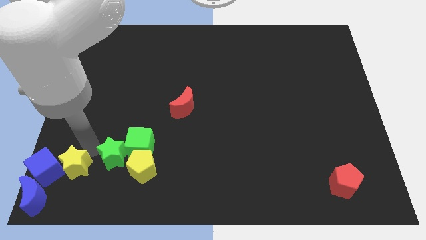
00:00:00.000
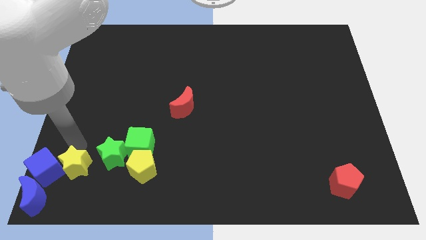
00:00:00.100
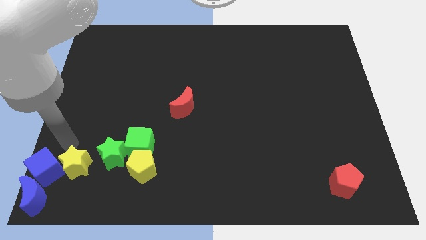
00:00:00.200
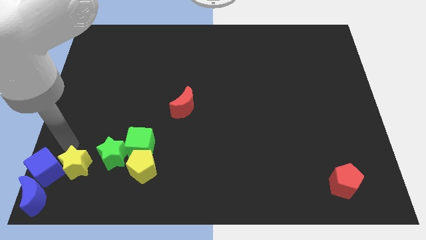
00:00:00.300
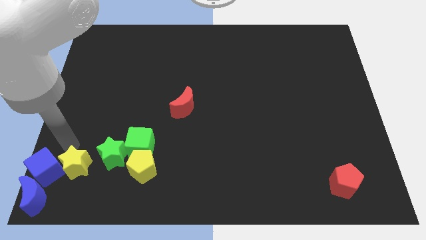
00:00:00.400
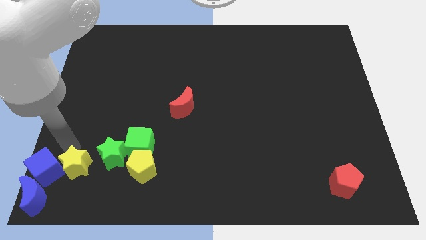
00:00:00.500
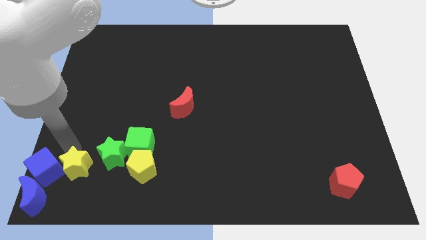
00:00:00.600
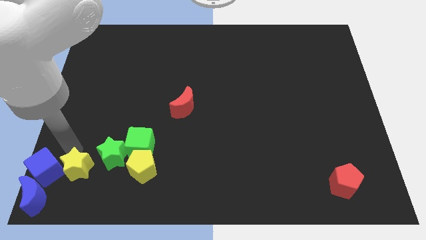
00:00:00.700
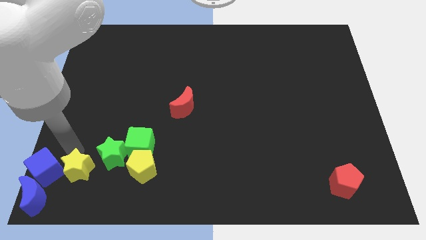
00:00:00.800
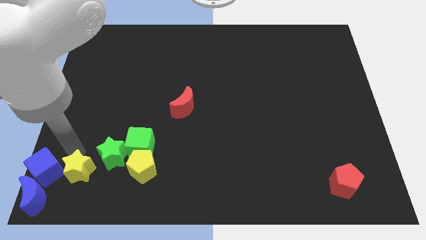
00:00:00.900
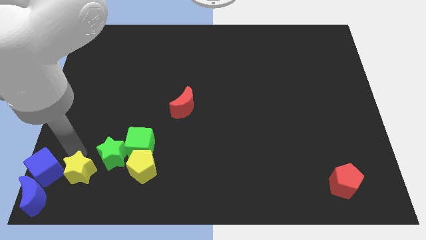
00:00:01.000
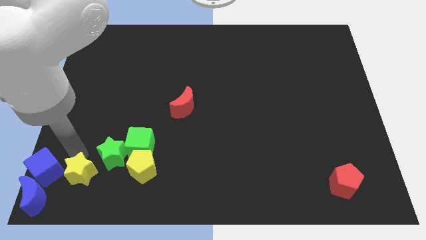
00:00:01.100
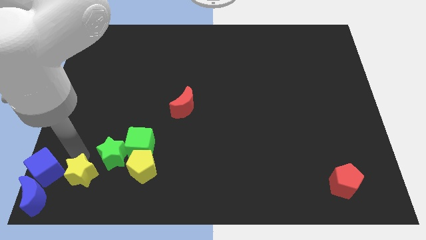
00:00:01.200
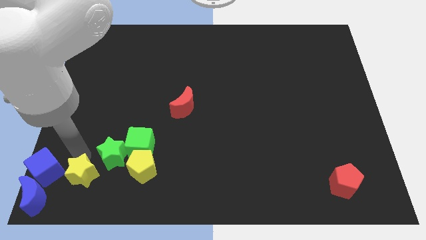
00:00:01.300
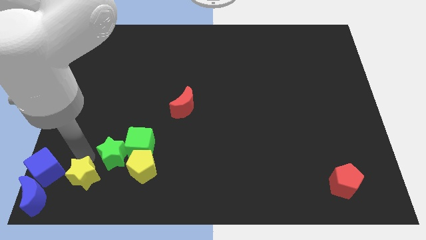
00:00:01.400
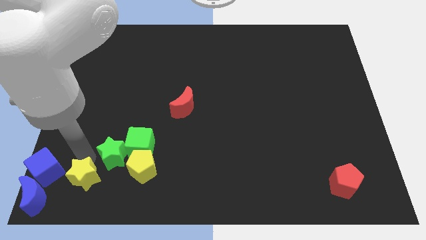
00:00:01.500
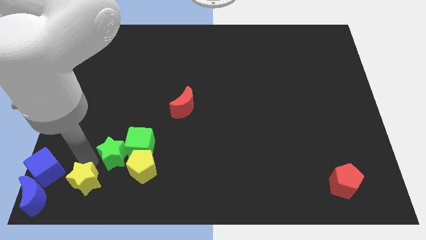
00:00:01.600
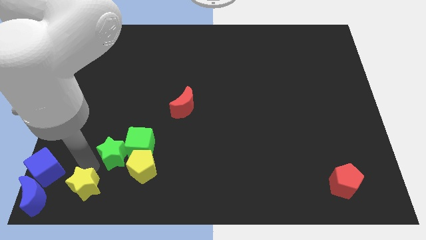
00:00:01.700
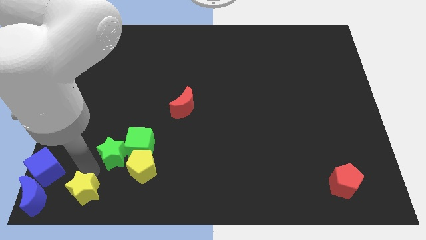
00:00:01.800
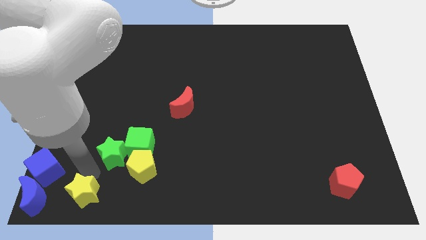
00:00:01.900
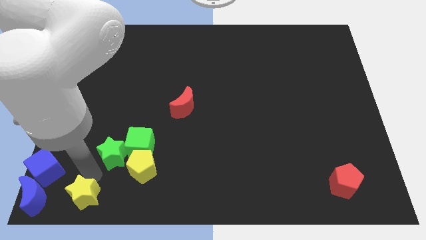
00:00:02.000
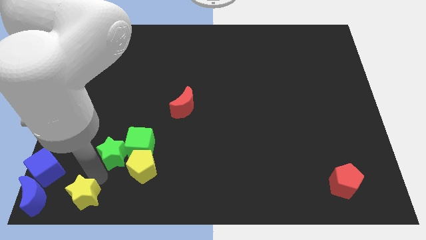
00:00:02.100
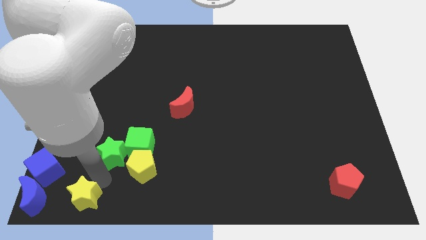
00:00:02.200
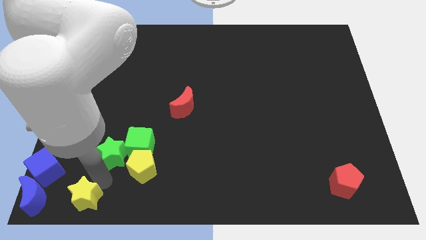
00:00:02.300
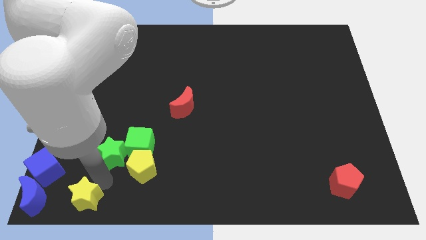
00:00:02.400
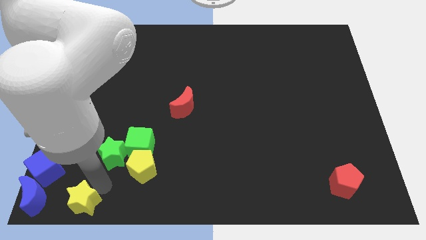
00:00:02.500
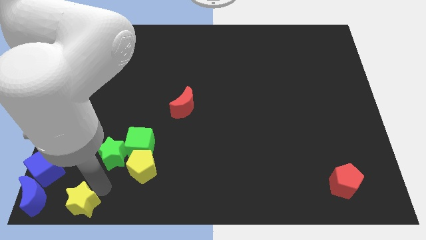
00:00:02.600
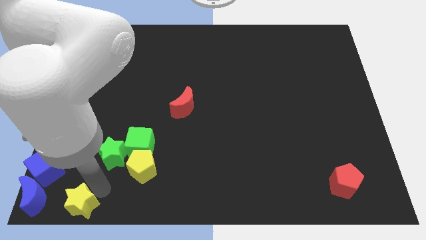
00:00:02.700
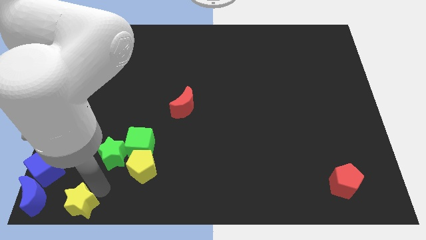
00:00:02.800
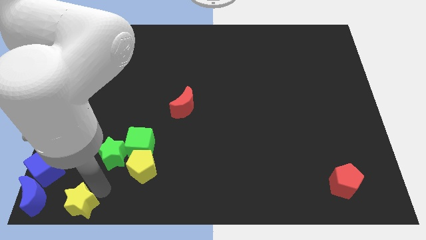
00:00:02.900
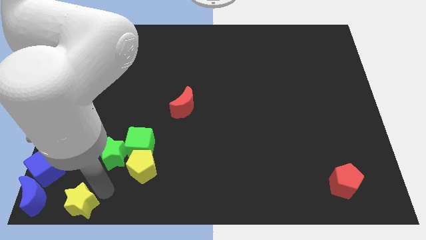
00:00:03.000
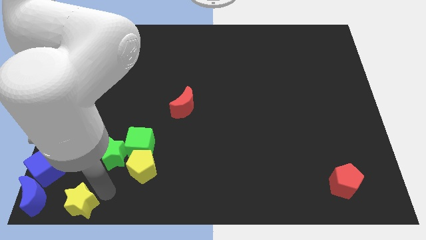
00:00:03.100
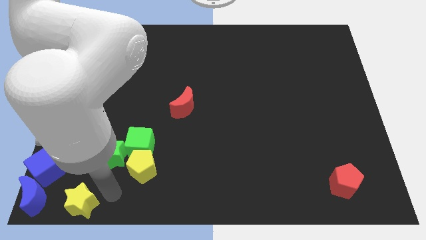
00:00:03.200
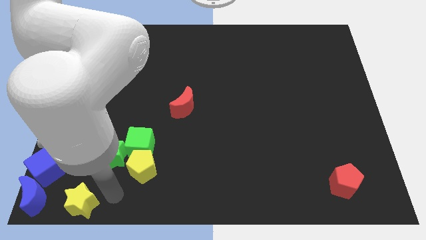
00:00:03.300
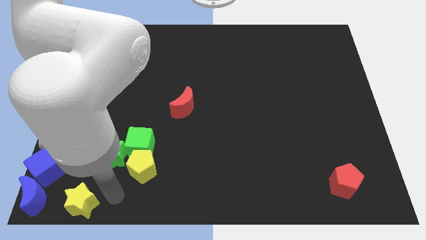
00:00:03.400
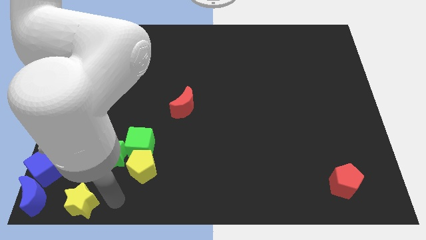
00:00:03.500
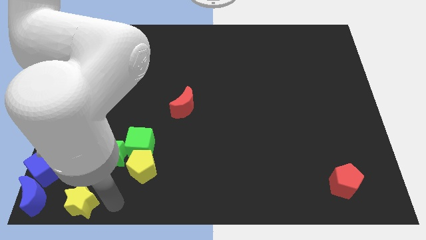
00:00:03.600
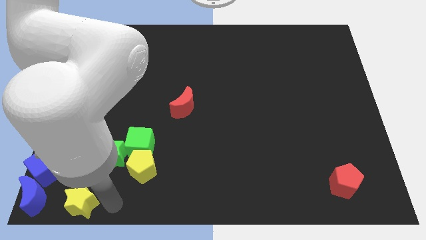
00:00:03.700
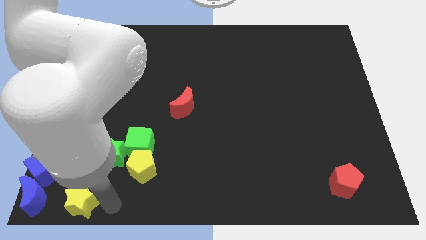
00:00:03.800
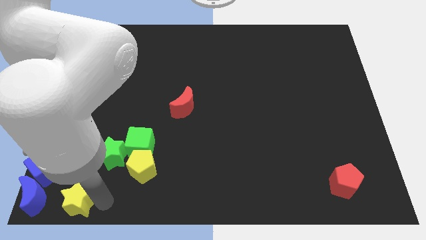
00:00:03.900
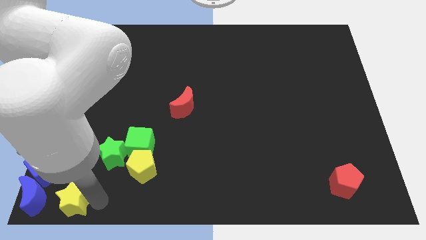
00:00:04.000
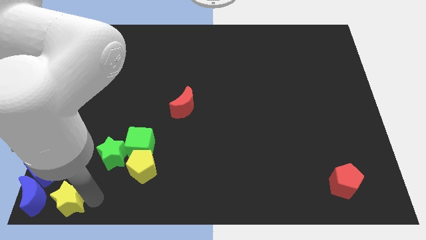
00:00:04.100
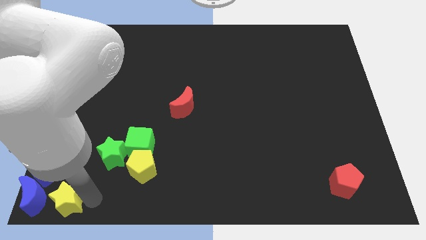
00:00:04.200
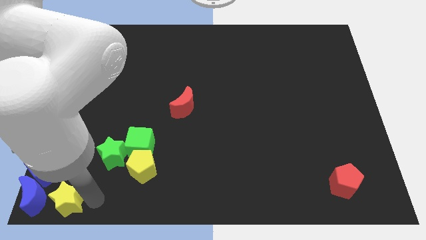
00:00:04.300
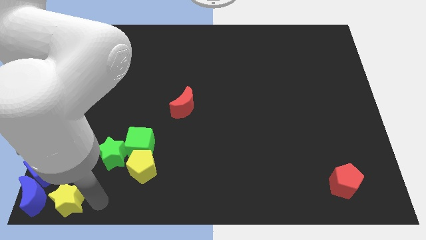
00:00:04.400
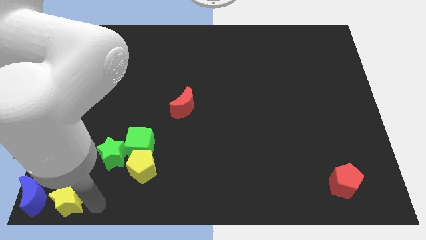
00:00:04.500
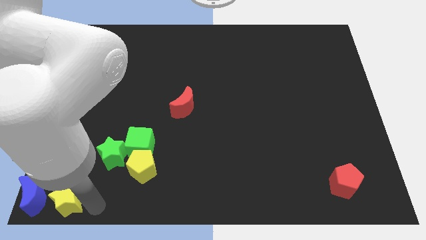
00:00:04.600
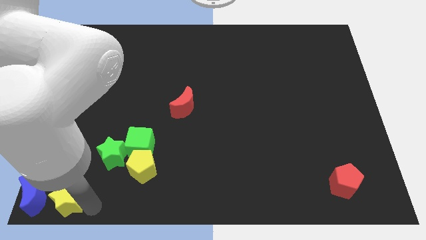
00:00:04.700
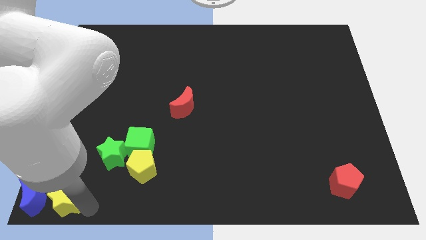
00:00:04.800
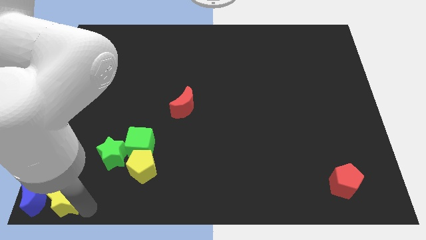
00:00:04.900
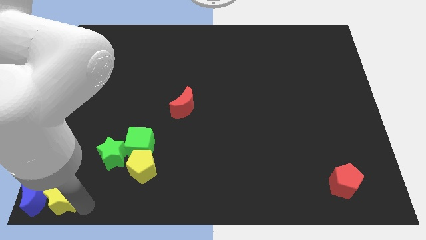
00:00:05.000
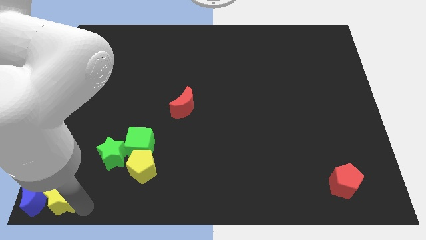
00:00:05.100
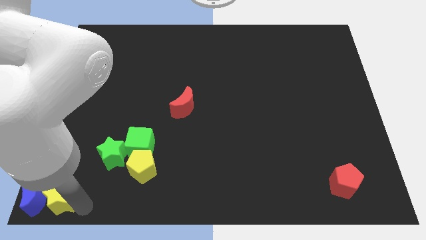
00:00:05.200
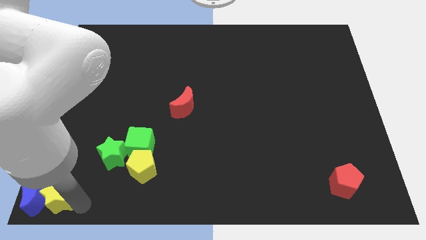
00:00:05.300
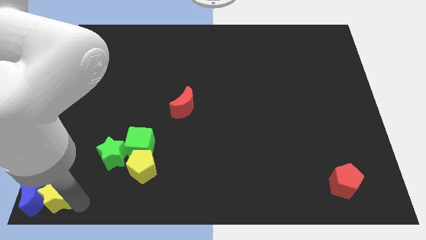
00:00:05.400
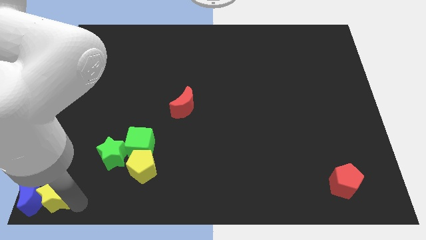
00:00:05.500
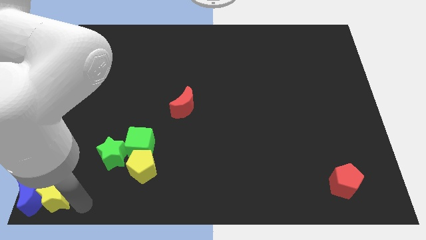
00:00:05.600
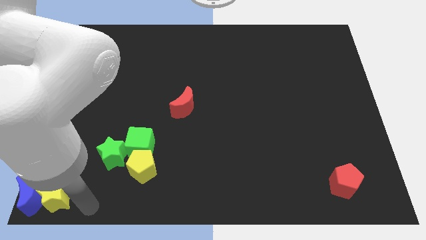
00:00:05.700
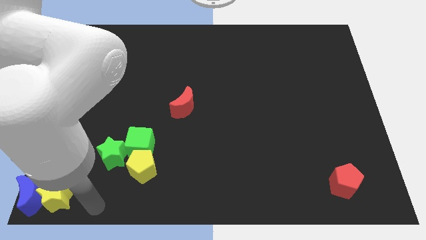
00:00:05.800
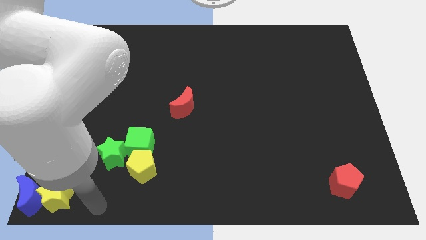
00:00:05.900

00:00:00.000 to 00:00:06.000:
slide the yellow star into the blue crescent

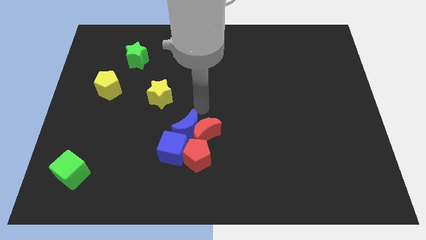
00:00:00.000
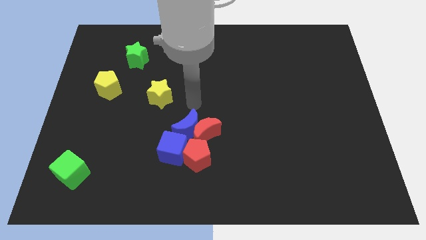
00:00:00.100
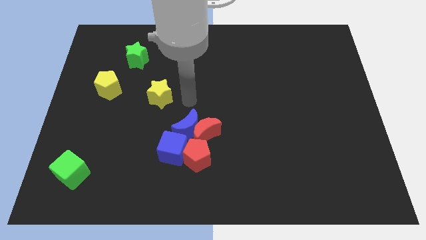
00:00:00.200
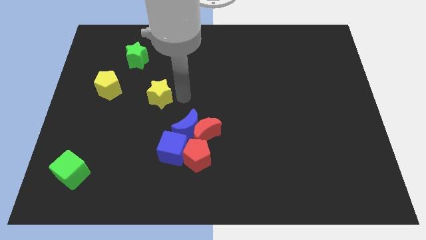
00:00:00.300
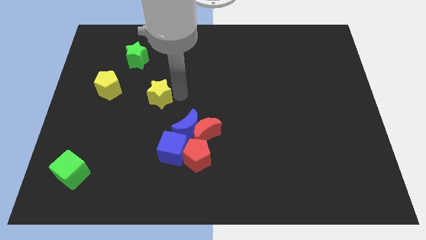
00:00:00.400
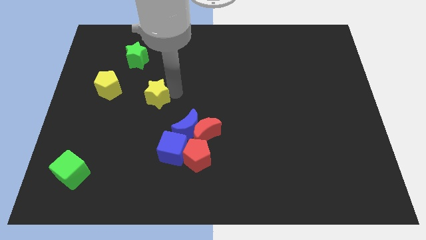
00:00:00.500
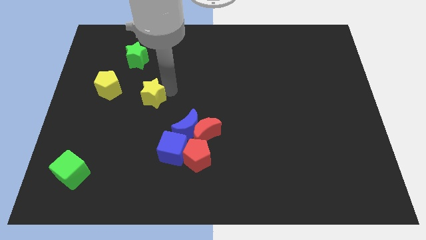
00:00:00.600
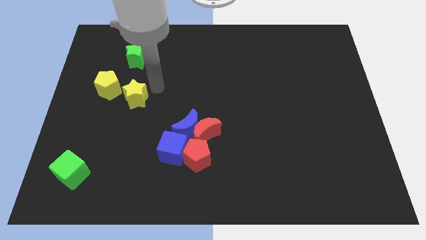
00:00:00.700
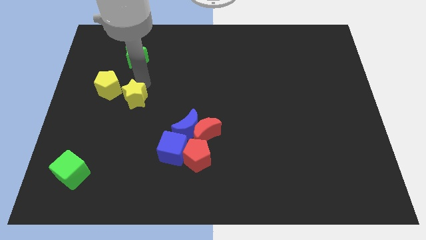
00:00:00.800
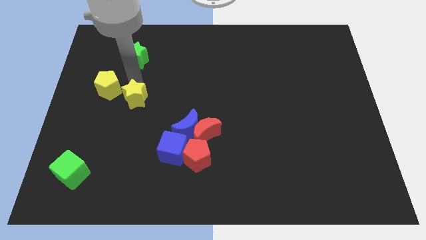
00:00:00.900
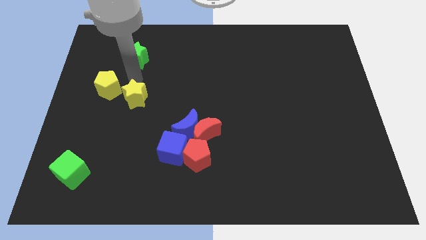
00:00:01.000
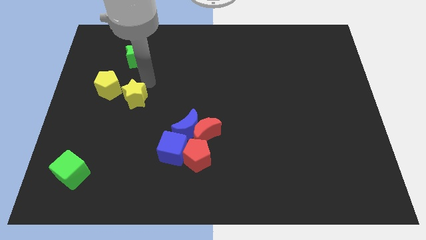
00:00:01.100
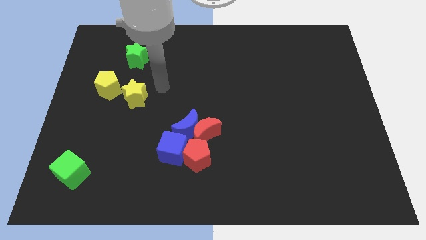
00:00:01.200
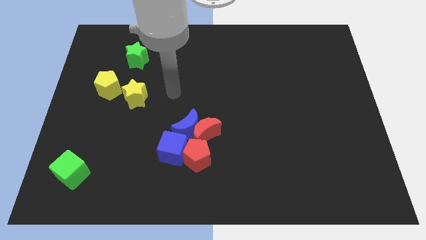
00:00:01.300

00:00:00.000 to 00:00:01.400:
push the yellow star close to the yellow pentagon

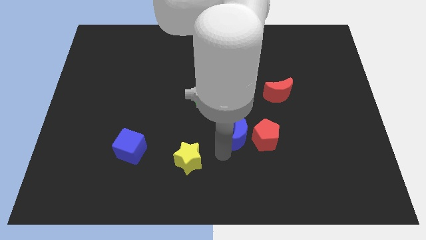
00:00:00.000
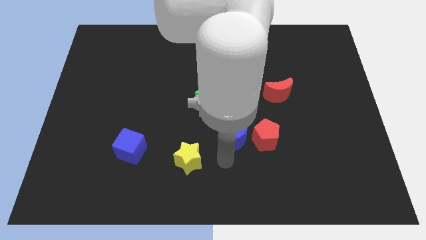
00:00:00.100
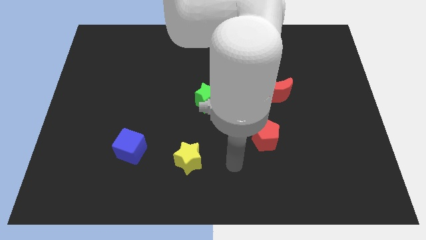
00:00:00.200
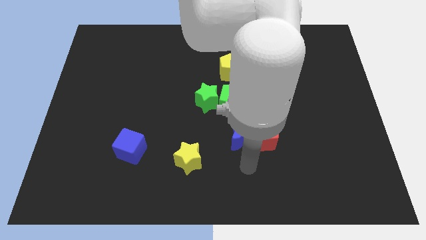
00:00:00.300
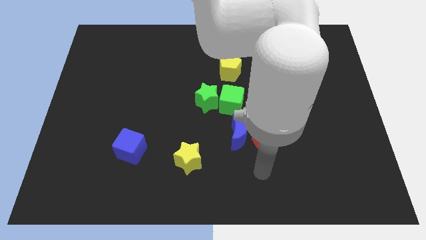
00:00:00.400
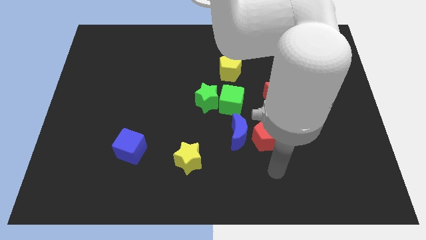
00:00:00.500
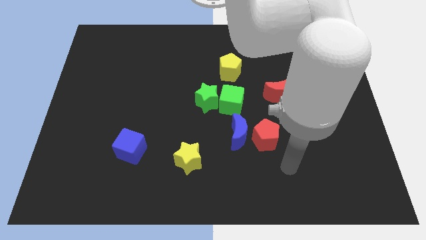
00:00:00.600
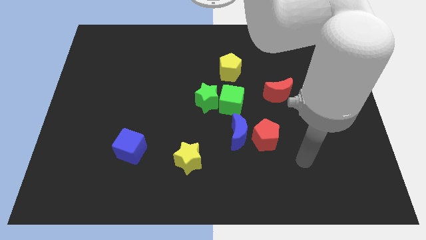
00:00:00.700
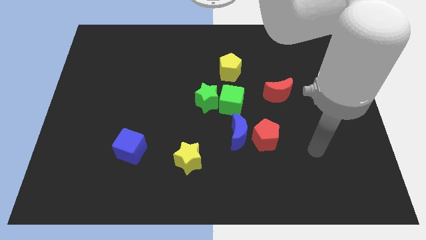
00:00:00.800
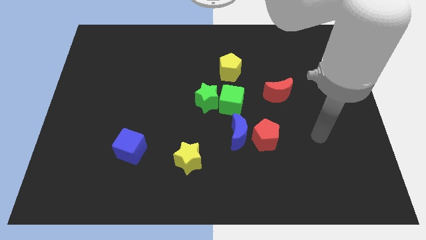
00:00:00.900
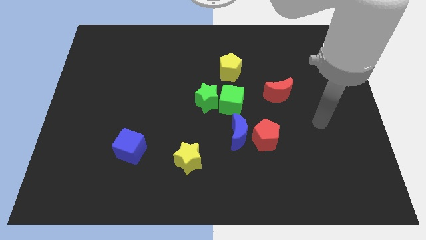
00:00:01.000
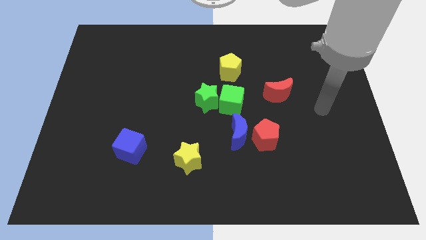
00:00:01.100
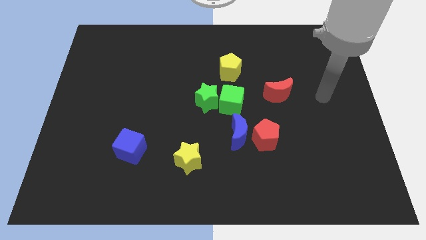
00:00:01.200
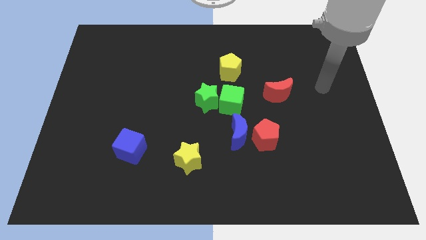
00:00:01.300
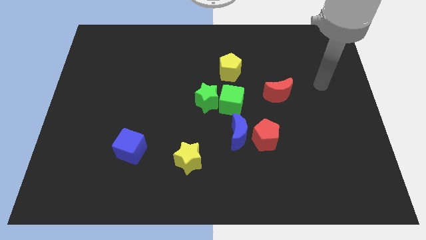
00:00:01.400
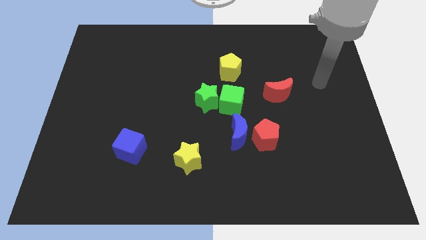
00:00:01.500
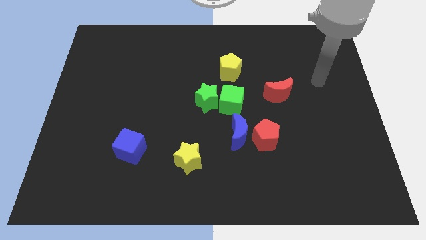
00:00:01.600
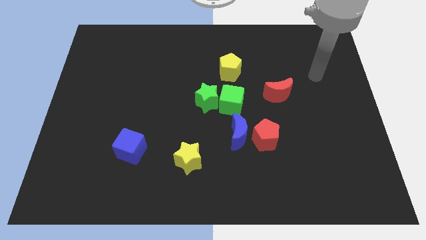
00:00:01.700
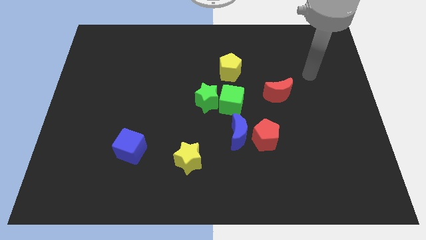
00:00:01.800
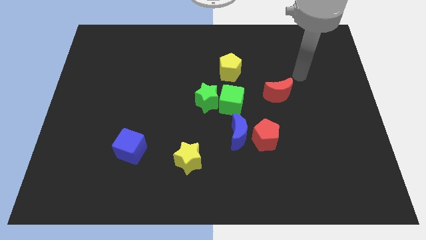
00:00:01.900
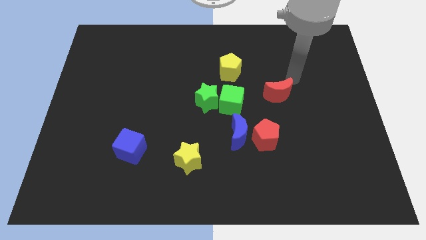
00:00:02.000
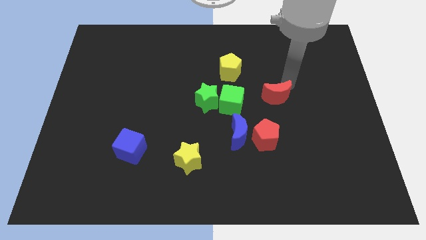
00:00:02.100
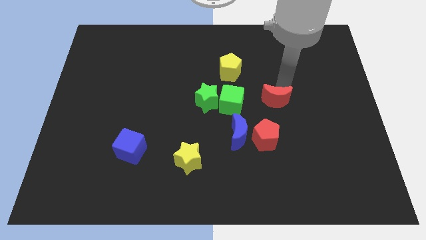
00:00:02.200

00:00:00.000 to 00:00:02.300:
place your hand to the top right of the red crescent
